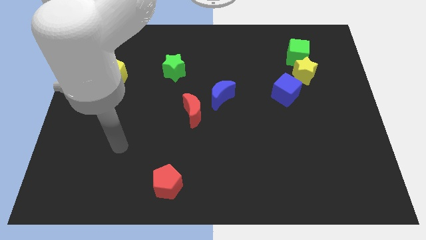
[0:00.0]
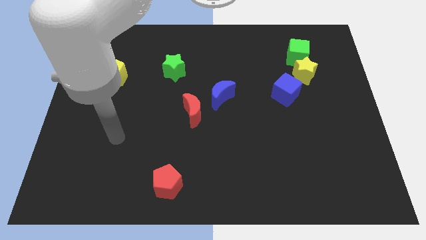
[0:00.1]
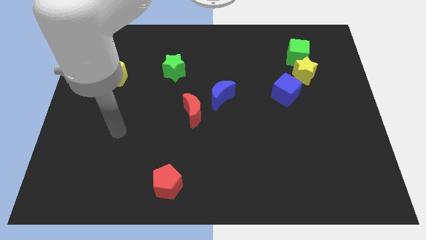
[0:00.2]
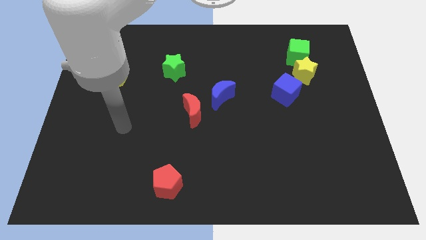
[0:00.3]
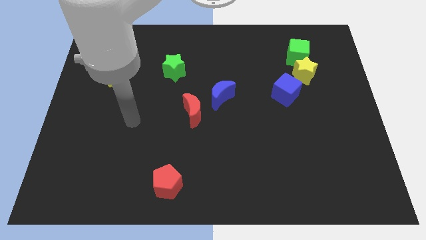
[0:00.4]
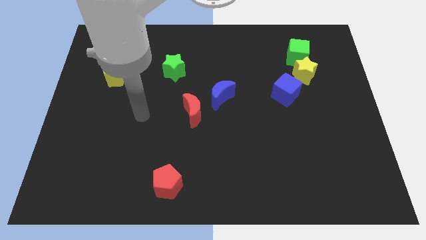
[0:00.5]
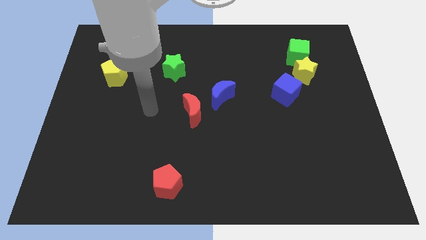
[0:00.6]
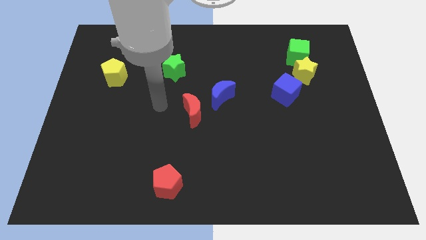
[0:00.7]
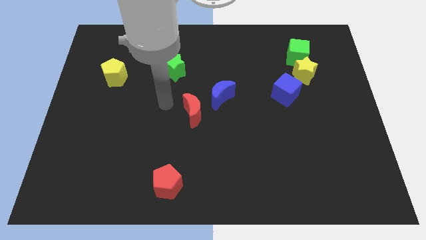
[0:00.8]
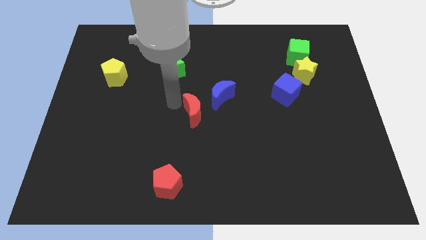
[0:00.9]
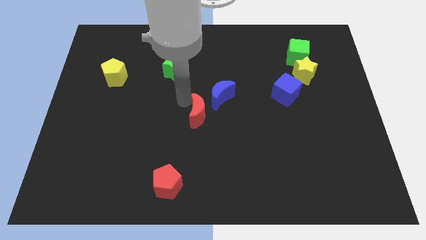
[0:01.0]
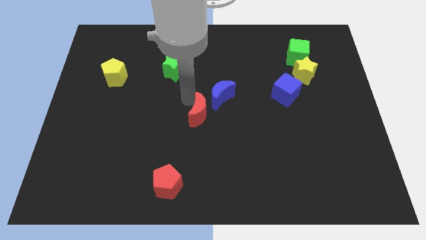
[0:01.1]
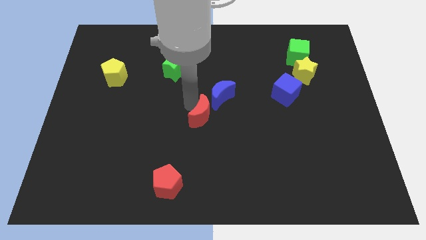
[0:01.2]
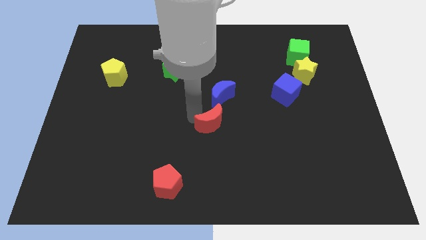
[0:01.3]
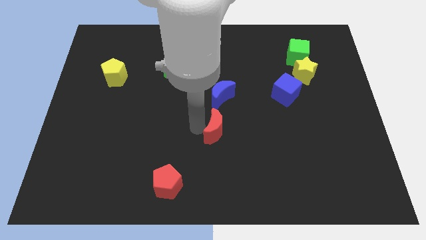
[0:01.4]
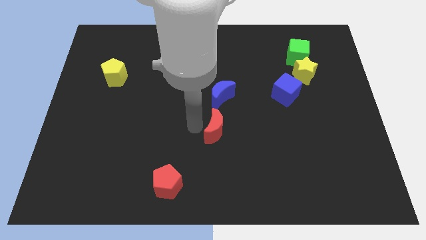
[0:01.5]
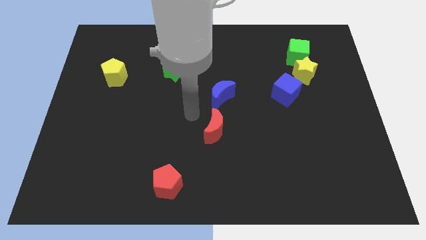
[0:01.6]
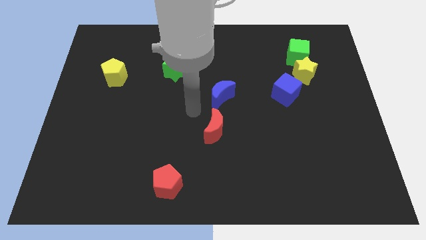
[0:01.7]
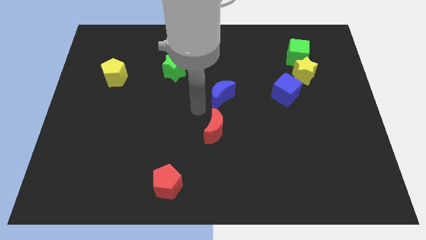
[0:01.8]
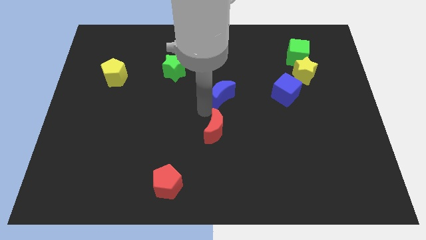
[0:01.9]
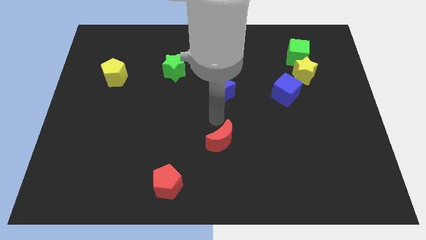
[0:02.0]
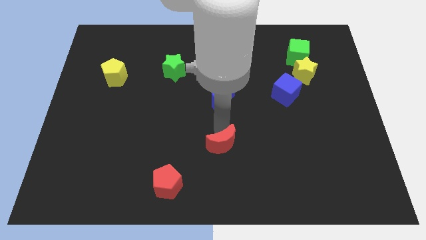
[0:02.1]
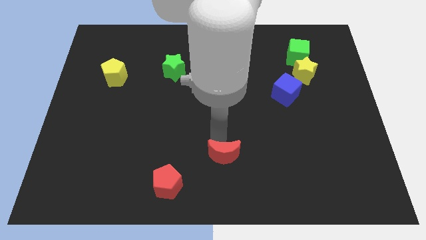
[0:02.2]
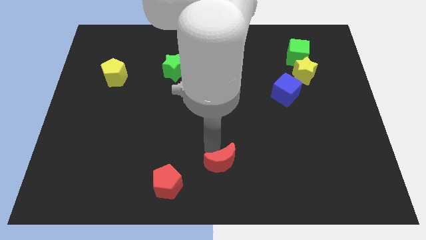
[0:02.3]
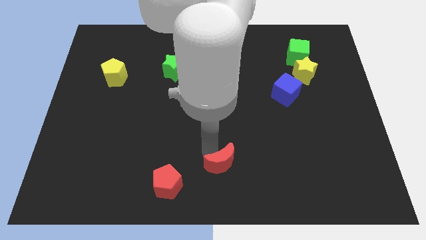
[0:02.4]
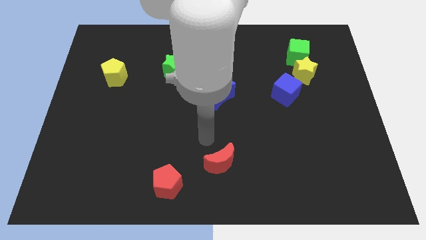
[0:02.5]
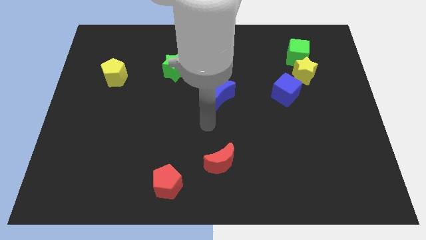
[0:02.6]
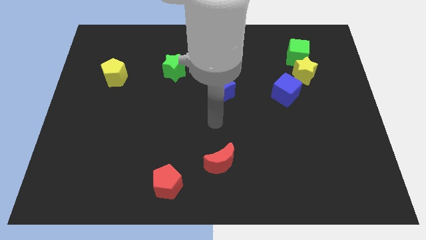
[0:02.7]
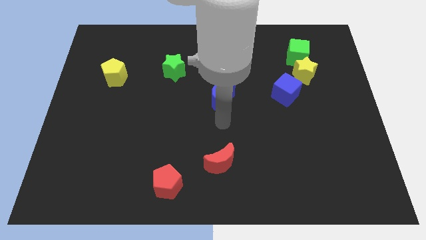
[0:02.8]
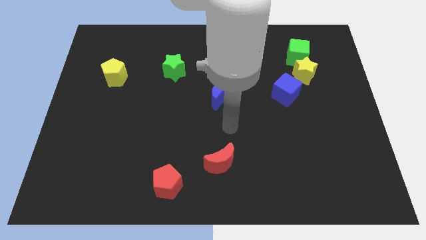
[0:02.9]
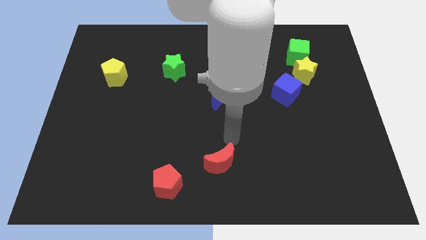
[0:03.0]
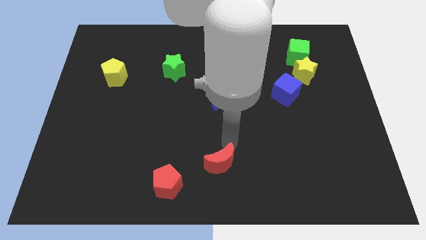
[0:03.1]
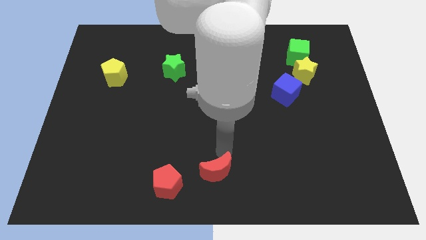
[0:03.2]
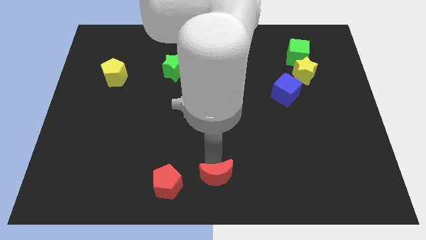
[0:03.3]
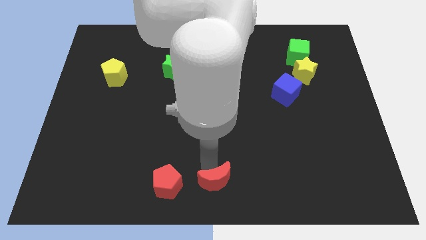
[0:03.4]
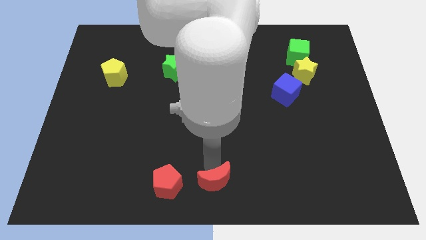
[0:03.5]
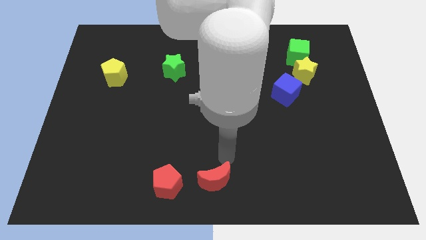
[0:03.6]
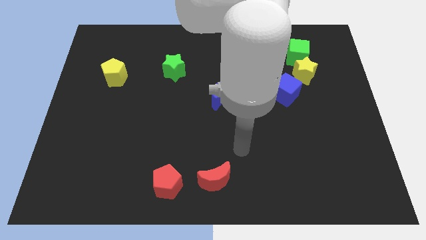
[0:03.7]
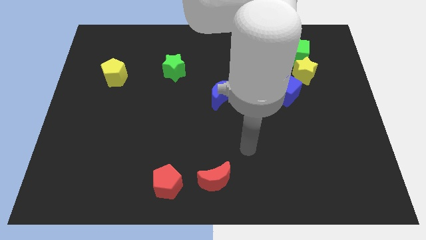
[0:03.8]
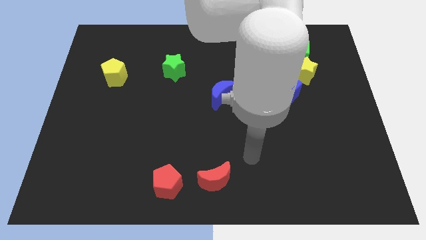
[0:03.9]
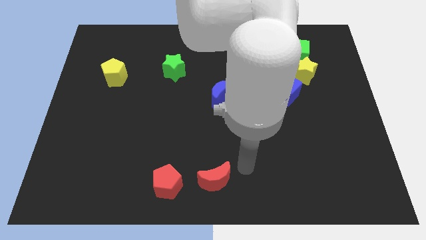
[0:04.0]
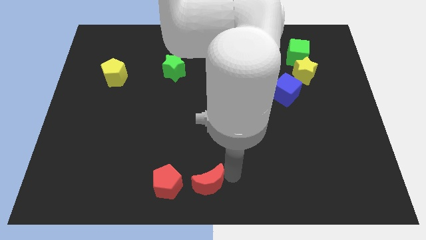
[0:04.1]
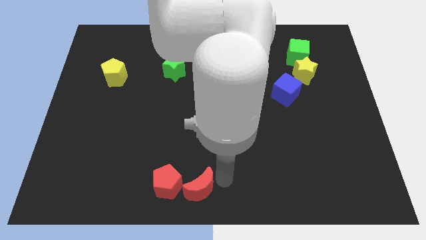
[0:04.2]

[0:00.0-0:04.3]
push the red crescent right to the red pentagon

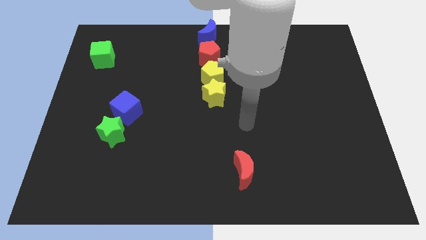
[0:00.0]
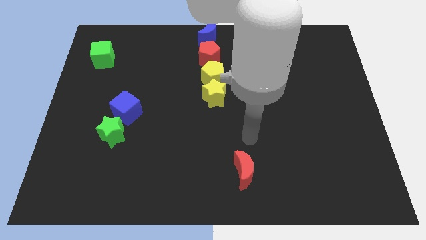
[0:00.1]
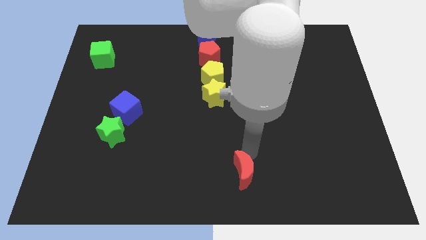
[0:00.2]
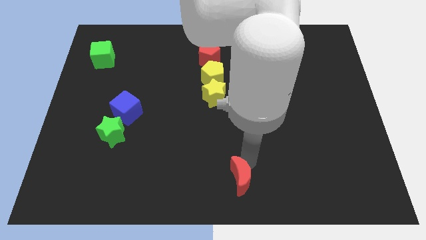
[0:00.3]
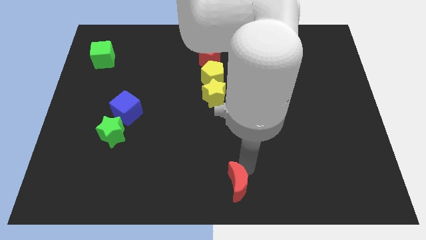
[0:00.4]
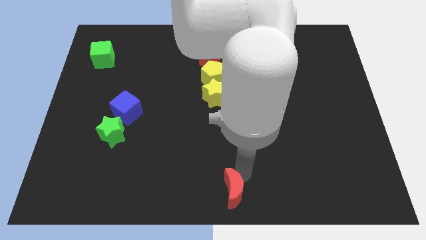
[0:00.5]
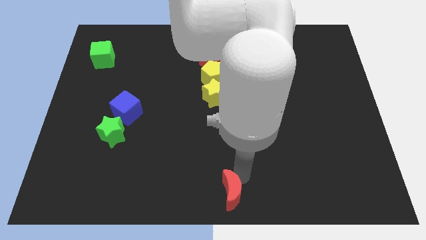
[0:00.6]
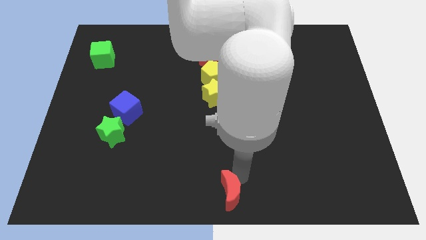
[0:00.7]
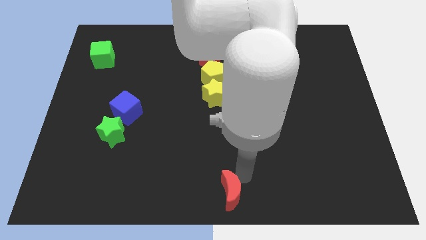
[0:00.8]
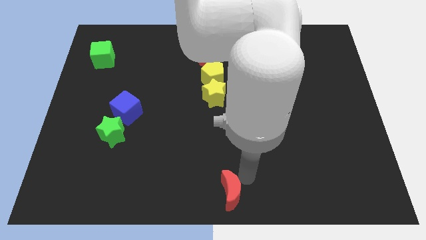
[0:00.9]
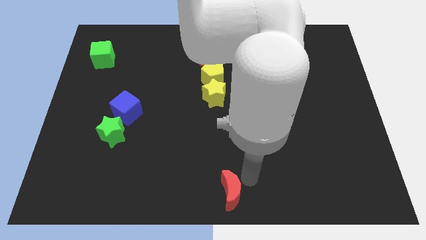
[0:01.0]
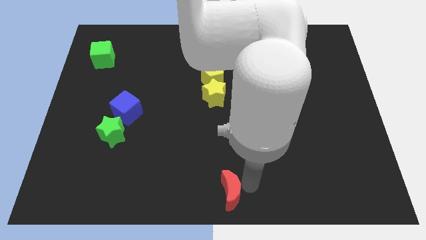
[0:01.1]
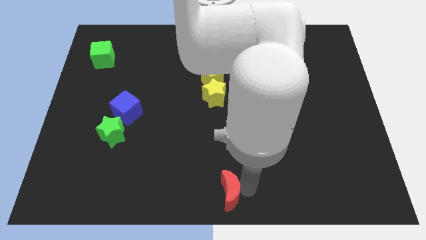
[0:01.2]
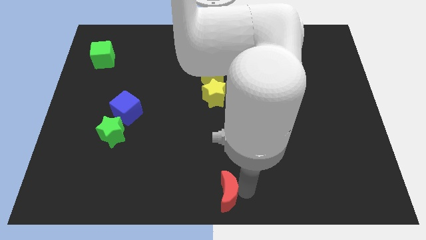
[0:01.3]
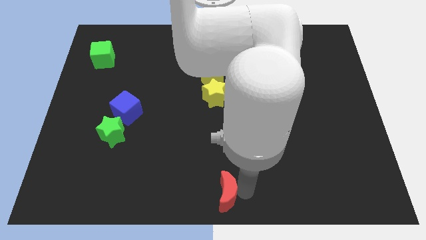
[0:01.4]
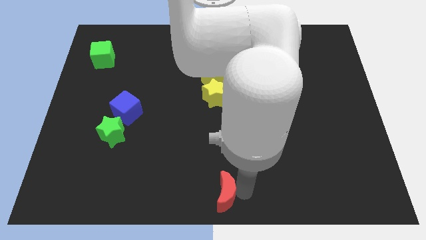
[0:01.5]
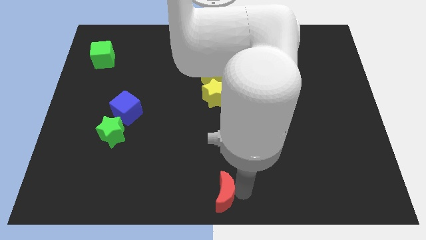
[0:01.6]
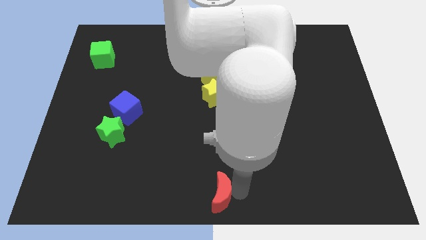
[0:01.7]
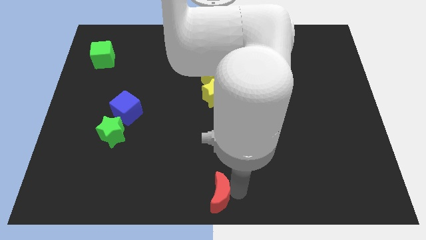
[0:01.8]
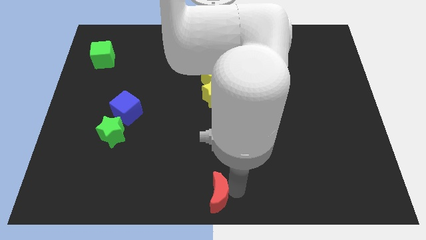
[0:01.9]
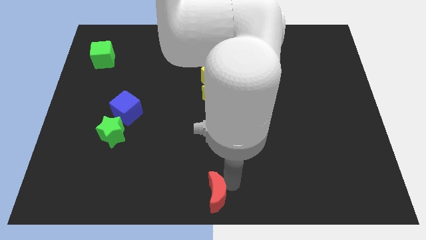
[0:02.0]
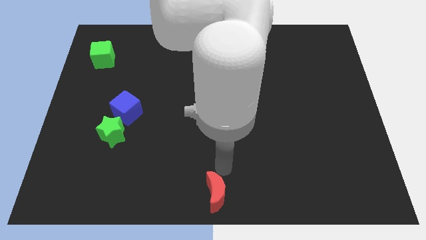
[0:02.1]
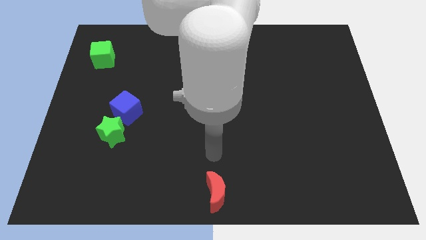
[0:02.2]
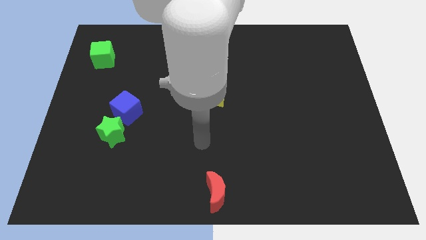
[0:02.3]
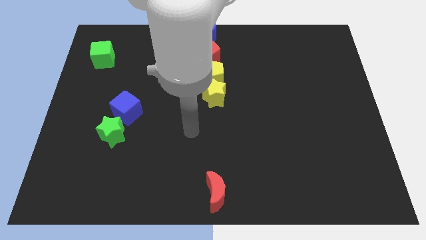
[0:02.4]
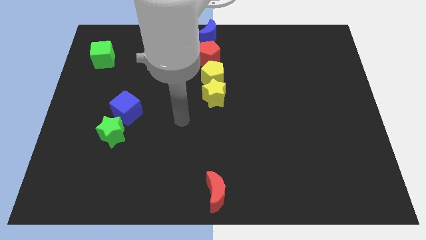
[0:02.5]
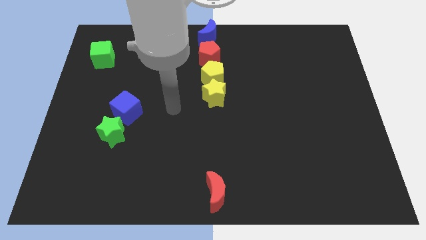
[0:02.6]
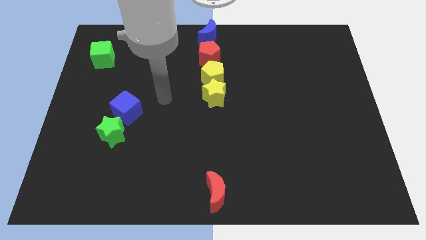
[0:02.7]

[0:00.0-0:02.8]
put the red moon vertically at the bottom side of the yellow star

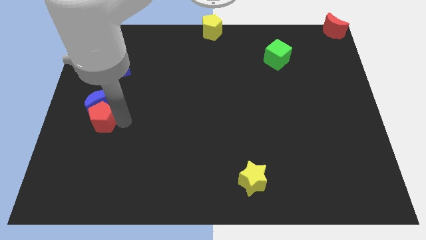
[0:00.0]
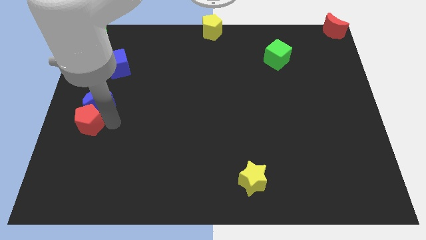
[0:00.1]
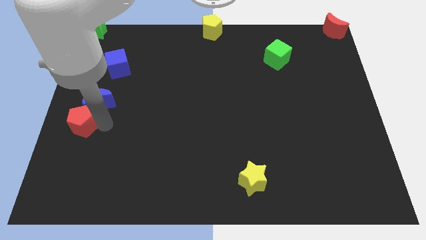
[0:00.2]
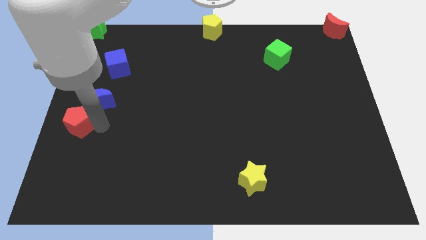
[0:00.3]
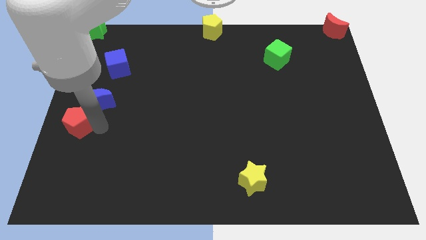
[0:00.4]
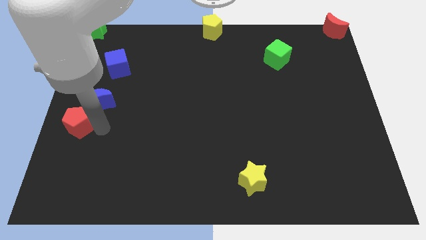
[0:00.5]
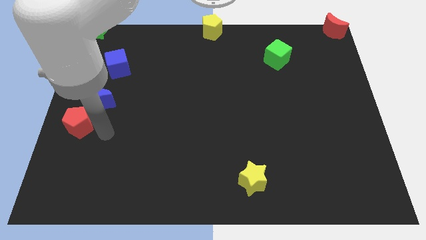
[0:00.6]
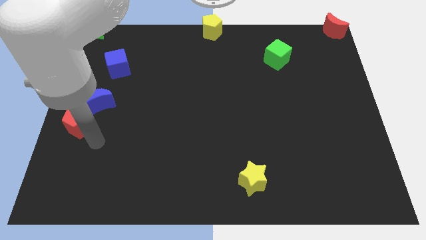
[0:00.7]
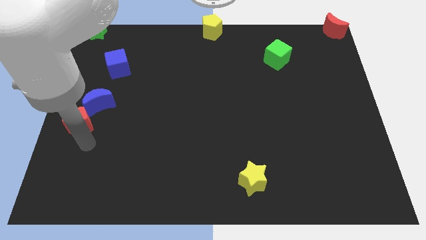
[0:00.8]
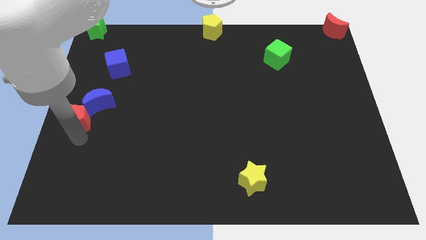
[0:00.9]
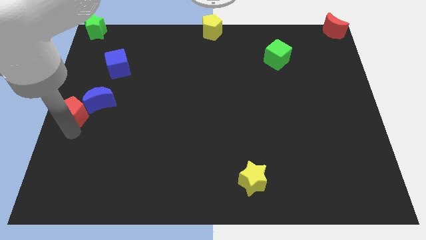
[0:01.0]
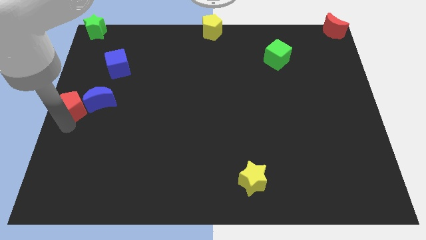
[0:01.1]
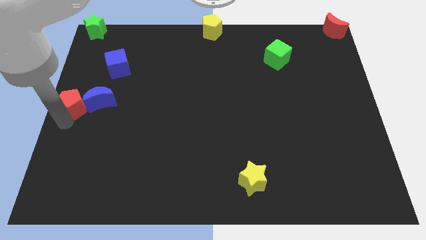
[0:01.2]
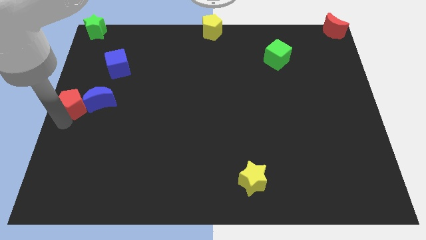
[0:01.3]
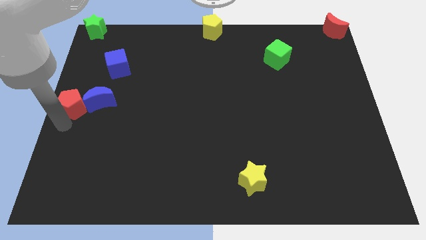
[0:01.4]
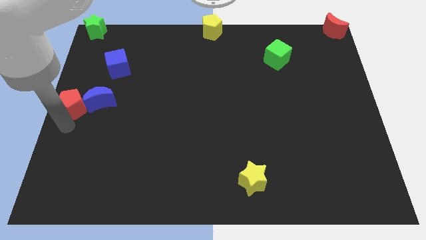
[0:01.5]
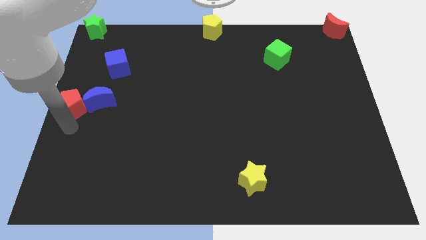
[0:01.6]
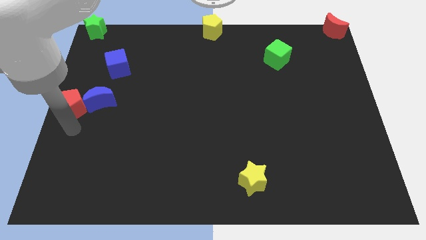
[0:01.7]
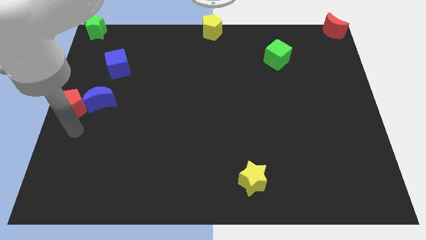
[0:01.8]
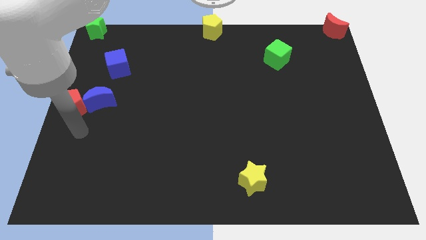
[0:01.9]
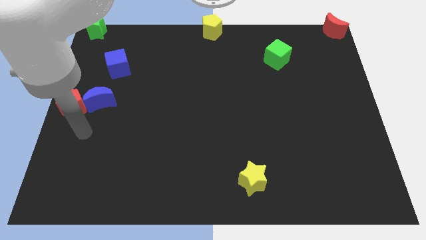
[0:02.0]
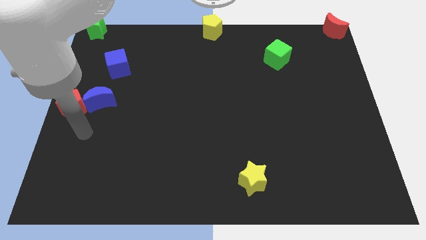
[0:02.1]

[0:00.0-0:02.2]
slide the red pentagon to the left of the blue moon
